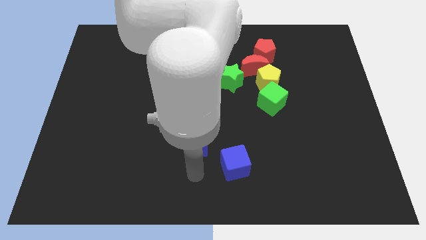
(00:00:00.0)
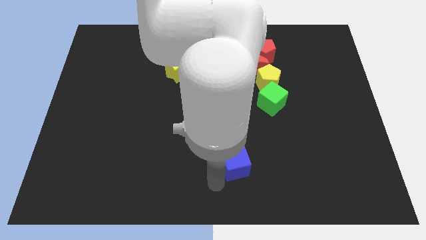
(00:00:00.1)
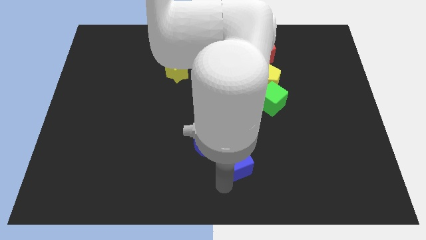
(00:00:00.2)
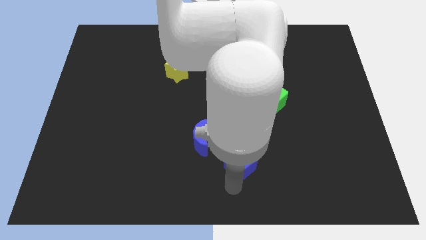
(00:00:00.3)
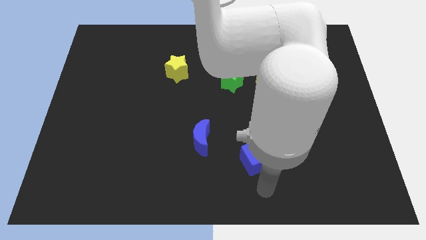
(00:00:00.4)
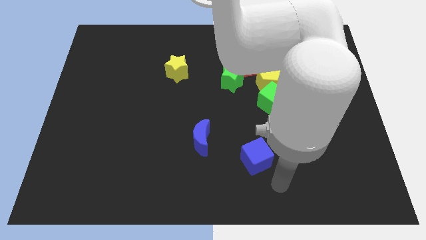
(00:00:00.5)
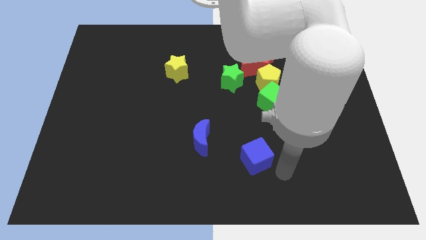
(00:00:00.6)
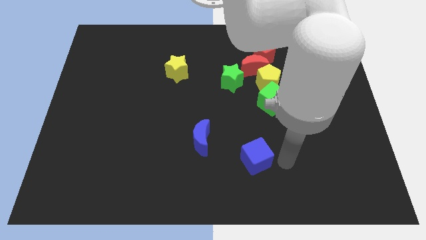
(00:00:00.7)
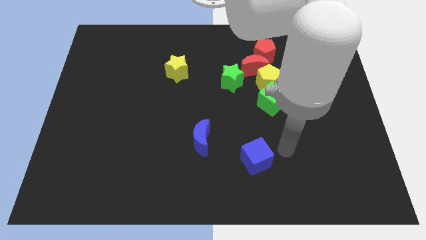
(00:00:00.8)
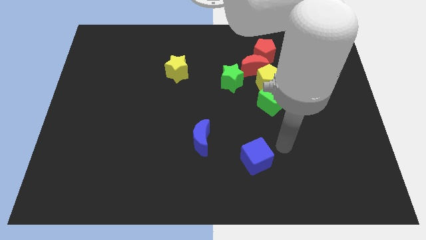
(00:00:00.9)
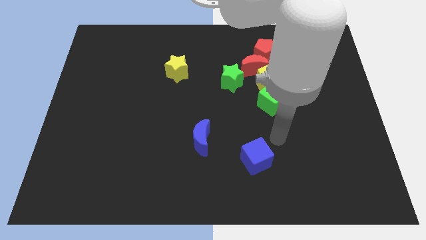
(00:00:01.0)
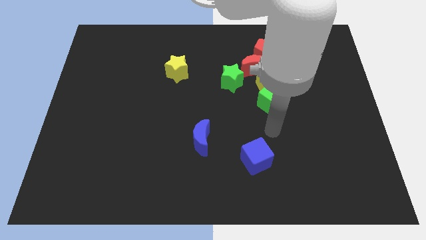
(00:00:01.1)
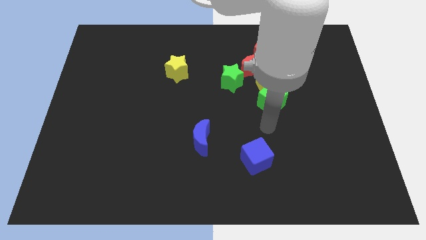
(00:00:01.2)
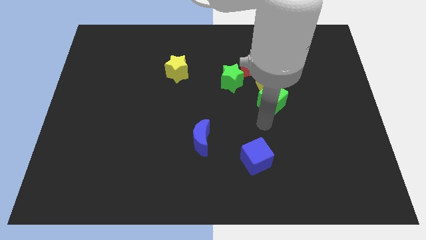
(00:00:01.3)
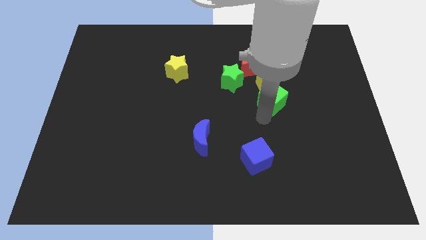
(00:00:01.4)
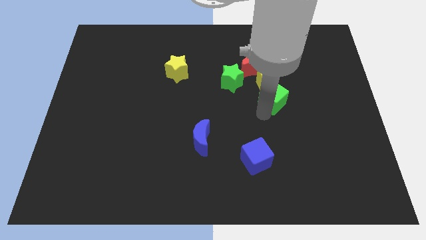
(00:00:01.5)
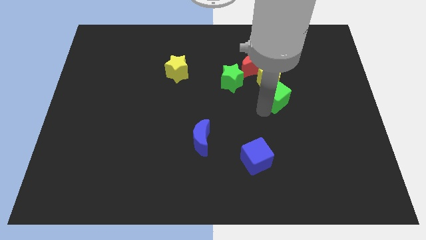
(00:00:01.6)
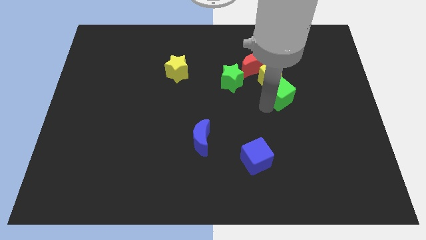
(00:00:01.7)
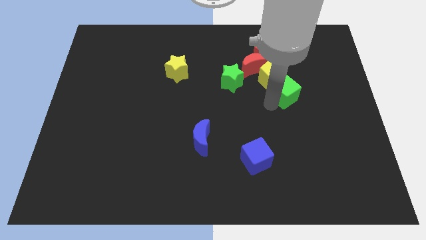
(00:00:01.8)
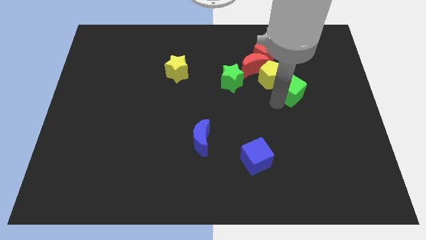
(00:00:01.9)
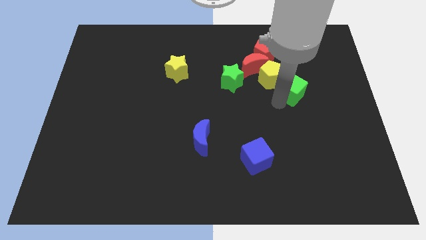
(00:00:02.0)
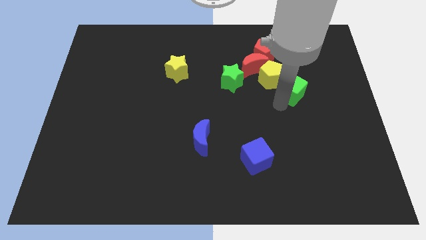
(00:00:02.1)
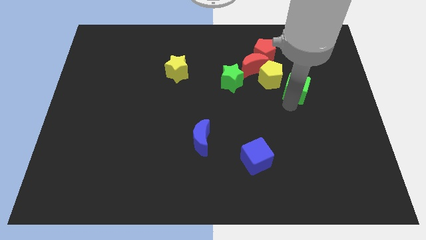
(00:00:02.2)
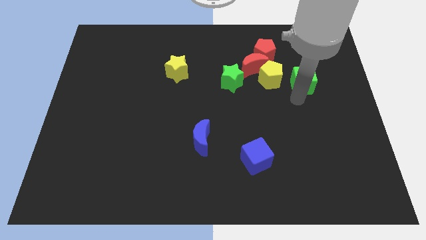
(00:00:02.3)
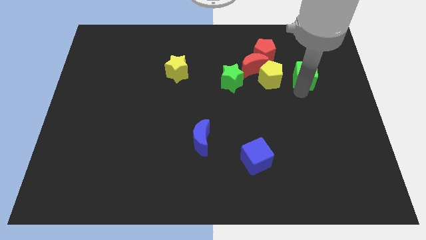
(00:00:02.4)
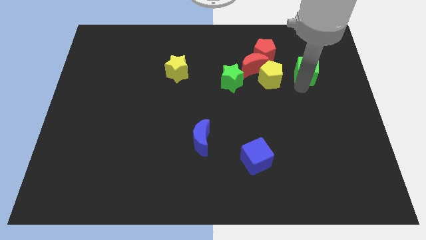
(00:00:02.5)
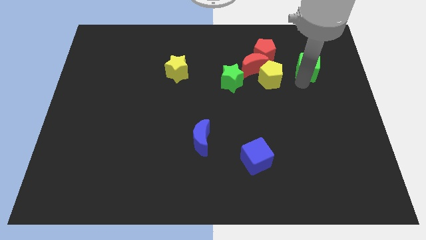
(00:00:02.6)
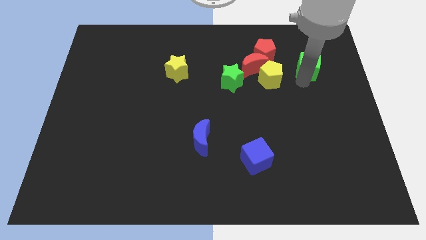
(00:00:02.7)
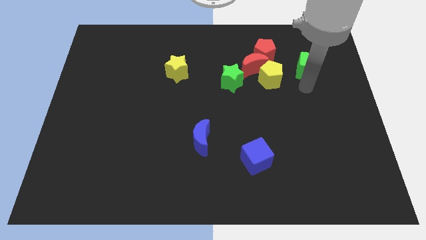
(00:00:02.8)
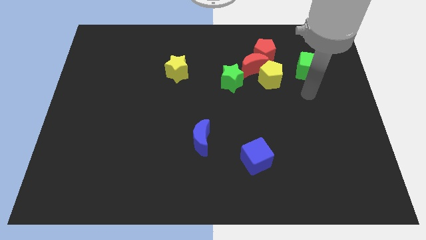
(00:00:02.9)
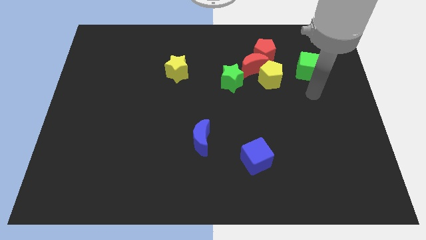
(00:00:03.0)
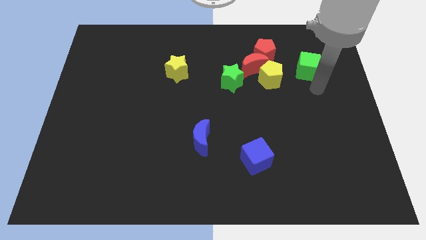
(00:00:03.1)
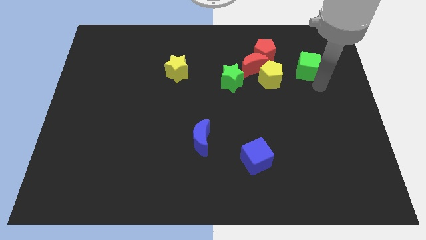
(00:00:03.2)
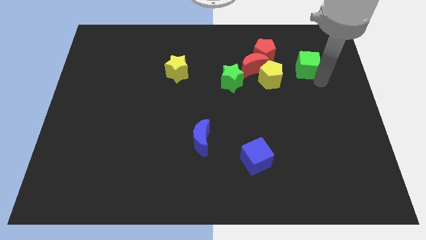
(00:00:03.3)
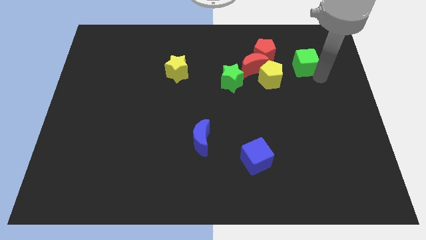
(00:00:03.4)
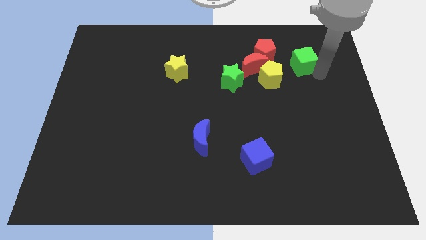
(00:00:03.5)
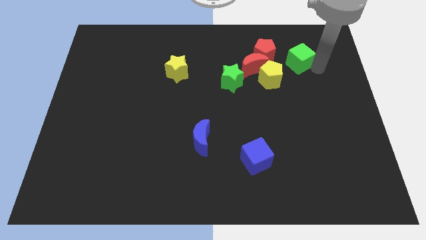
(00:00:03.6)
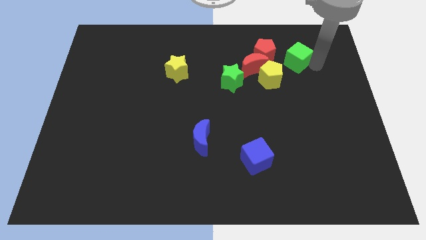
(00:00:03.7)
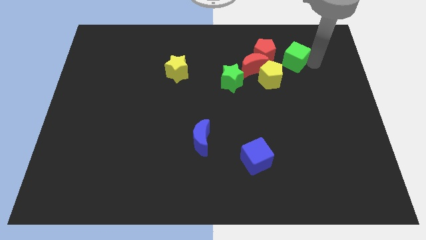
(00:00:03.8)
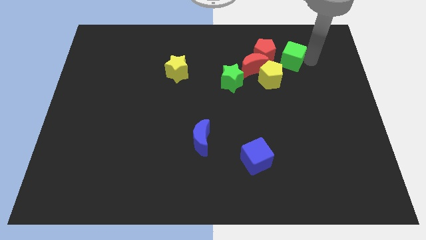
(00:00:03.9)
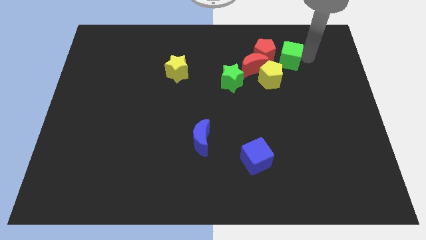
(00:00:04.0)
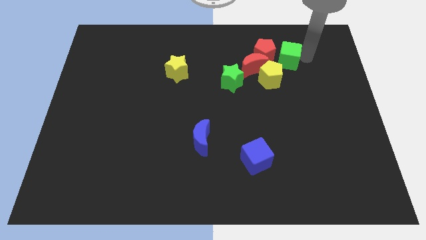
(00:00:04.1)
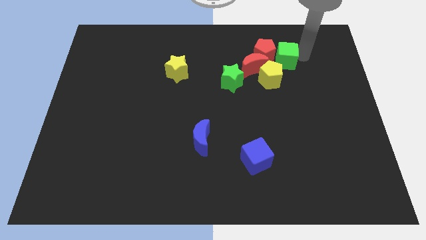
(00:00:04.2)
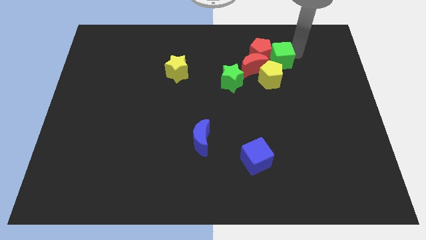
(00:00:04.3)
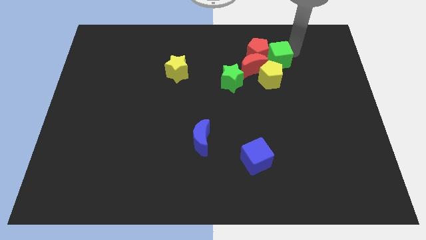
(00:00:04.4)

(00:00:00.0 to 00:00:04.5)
put the green cube close to the red pentagon

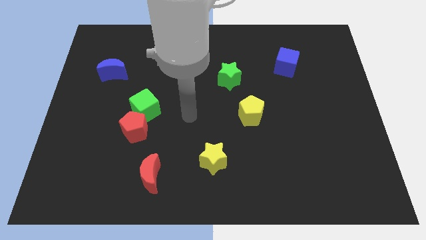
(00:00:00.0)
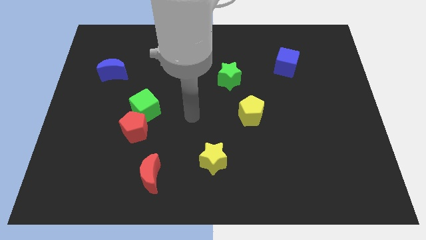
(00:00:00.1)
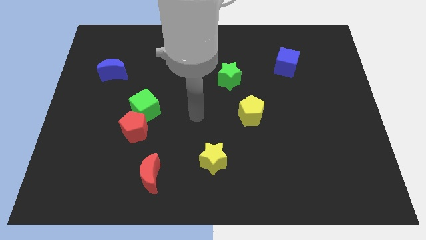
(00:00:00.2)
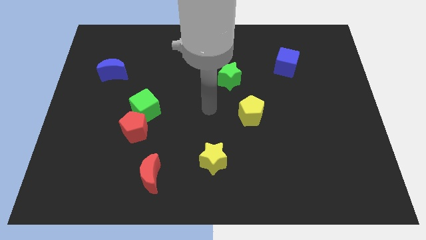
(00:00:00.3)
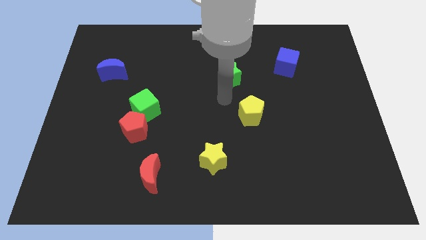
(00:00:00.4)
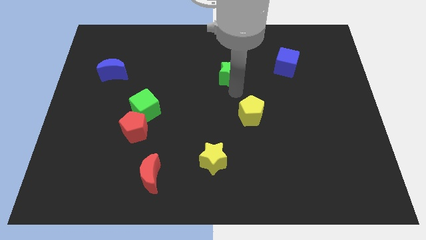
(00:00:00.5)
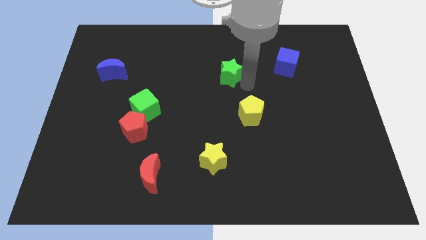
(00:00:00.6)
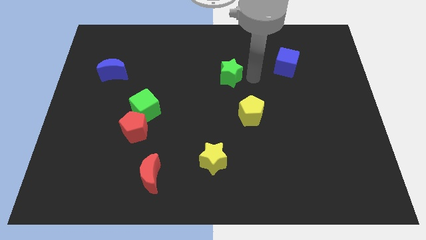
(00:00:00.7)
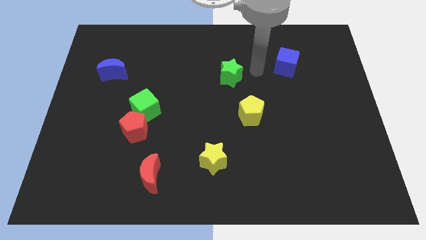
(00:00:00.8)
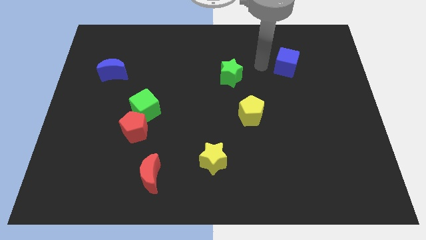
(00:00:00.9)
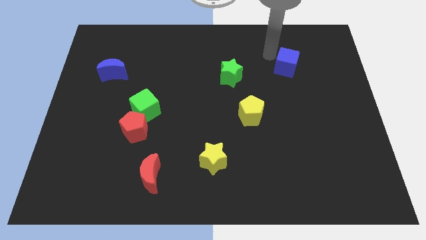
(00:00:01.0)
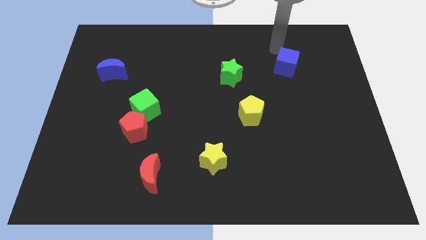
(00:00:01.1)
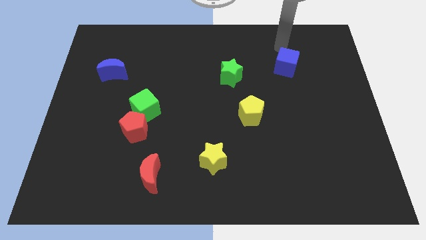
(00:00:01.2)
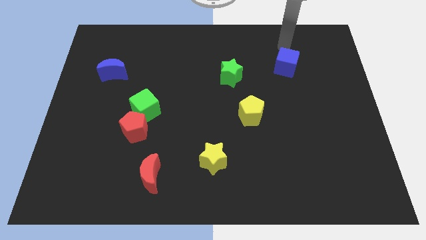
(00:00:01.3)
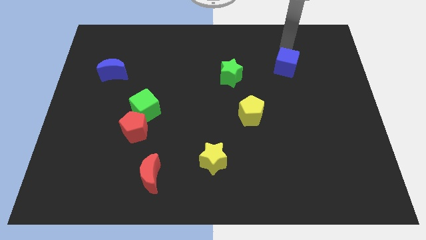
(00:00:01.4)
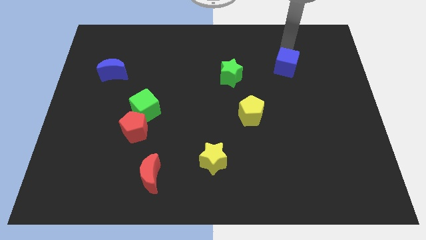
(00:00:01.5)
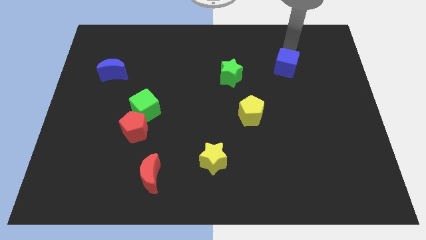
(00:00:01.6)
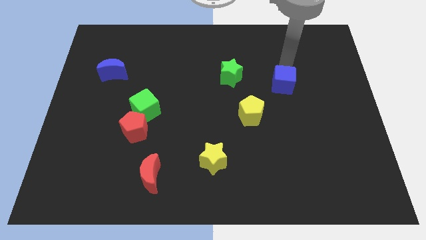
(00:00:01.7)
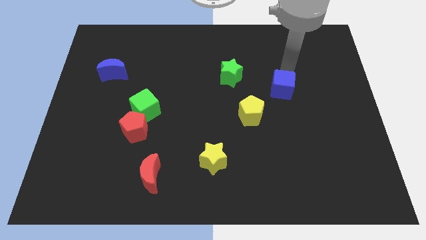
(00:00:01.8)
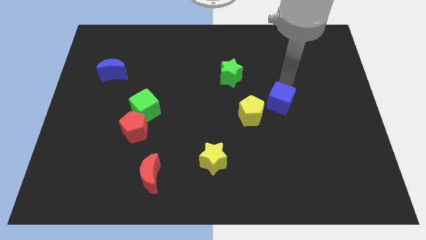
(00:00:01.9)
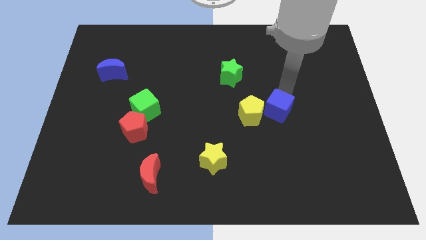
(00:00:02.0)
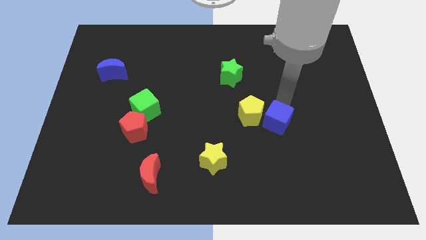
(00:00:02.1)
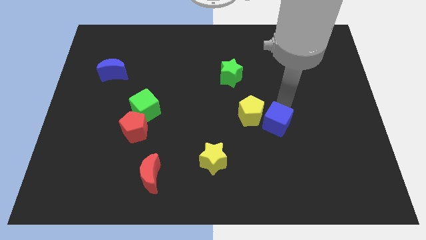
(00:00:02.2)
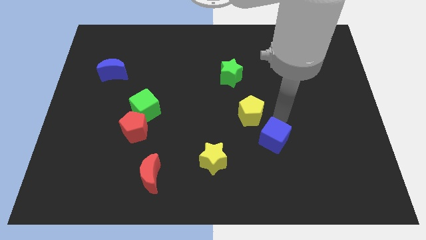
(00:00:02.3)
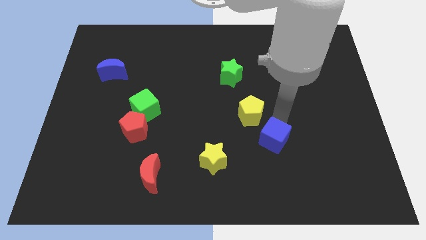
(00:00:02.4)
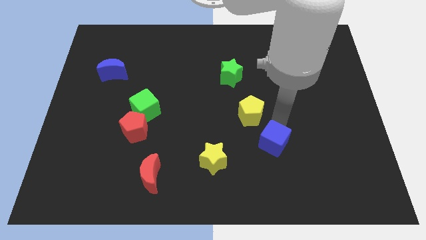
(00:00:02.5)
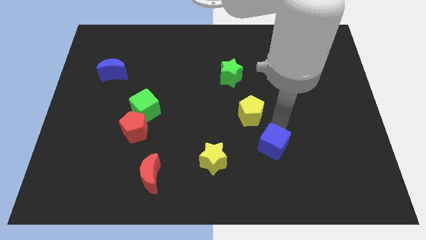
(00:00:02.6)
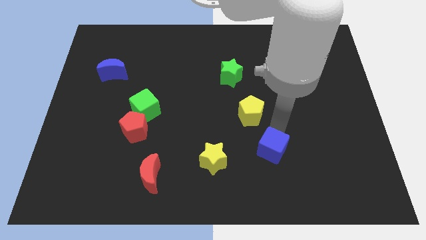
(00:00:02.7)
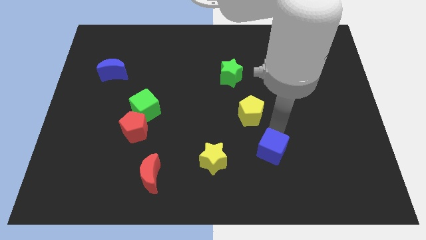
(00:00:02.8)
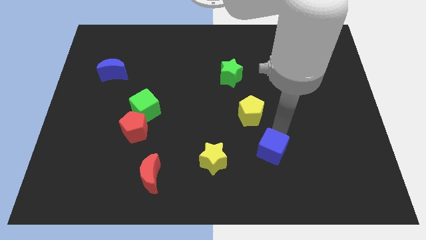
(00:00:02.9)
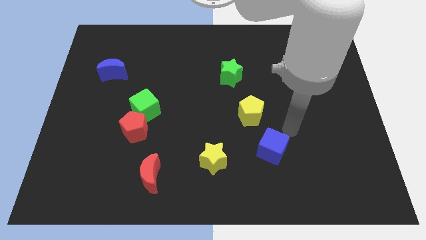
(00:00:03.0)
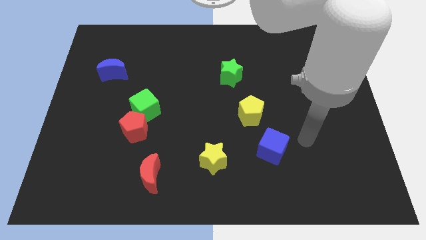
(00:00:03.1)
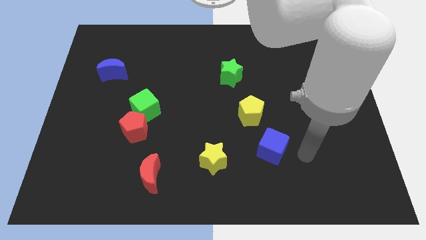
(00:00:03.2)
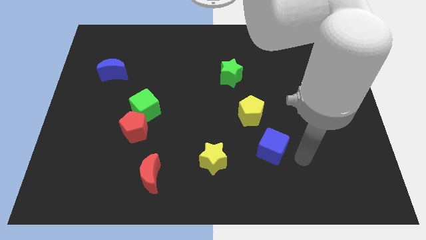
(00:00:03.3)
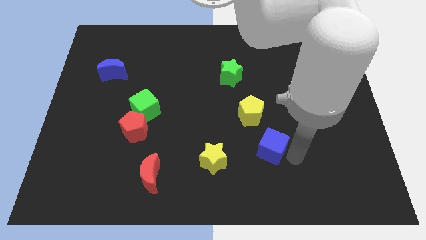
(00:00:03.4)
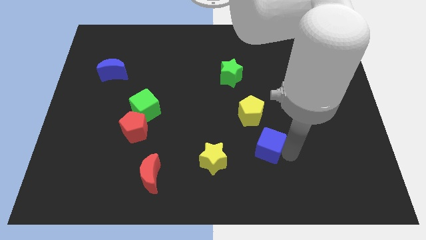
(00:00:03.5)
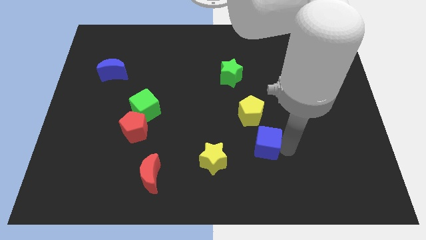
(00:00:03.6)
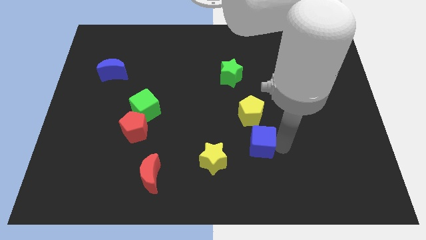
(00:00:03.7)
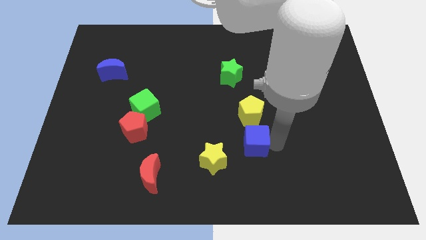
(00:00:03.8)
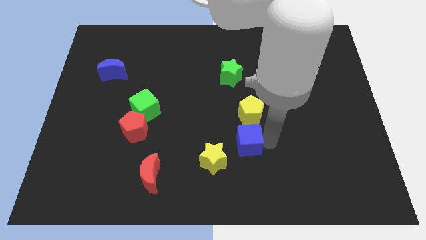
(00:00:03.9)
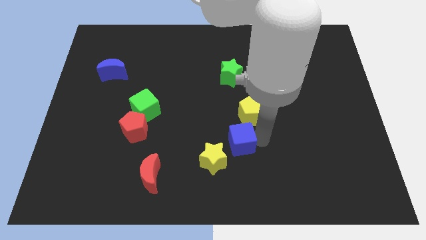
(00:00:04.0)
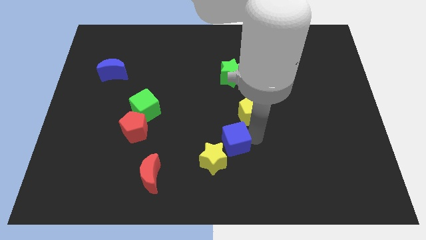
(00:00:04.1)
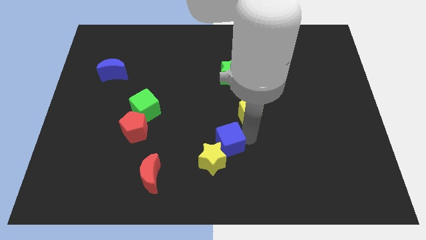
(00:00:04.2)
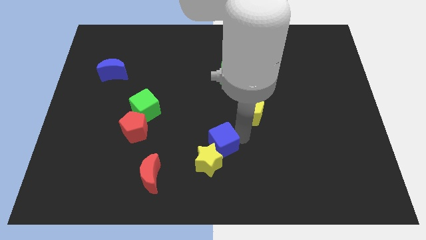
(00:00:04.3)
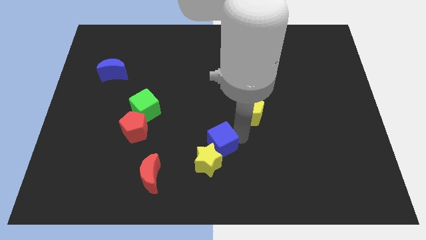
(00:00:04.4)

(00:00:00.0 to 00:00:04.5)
put the blue cube to the yellow star
